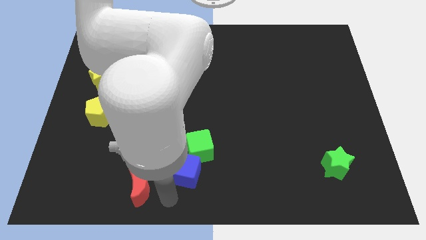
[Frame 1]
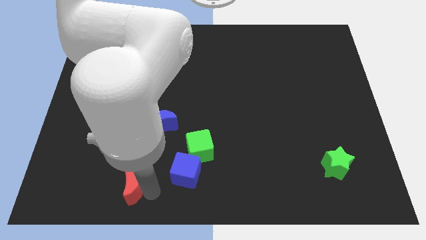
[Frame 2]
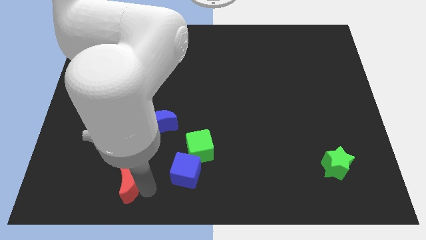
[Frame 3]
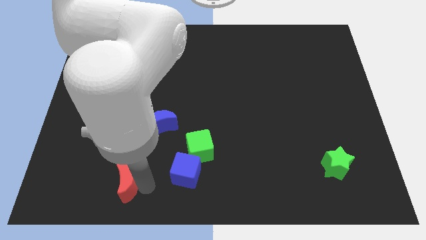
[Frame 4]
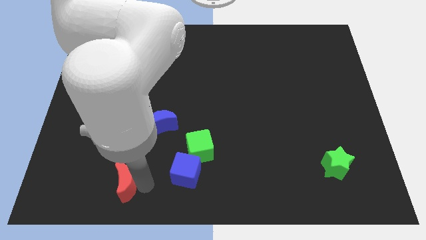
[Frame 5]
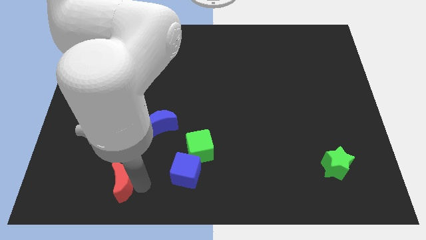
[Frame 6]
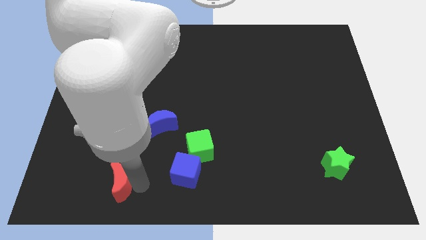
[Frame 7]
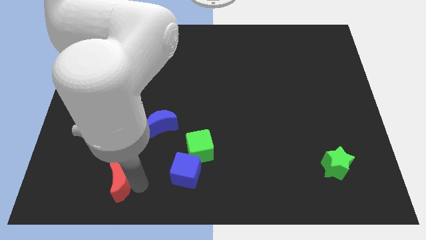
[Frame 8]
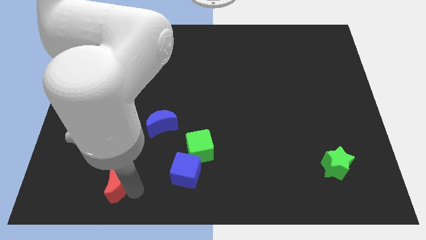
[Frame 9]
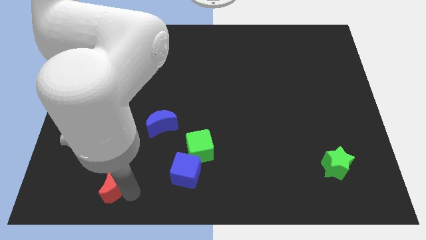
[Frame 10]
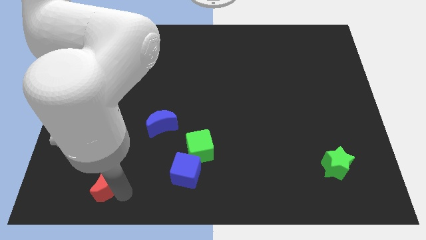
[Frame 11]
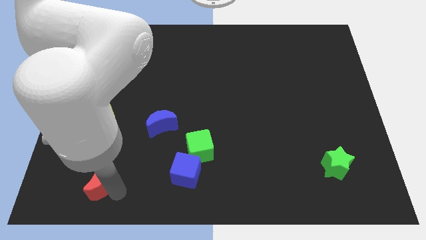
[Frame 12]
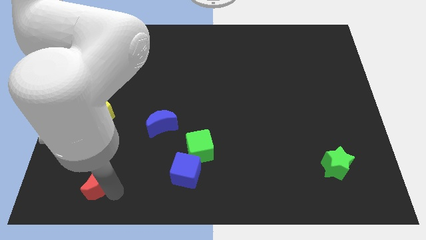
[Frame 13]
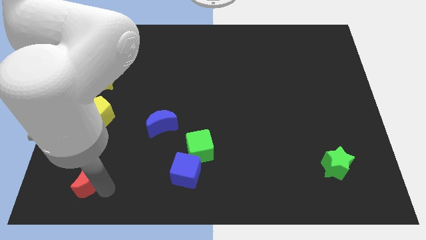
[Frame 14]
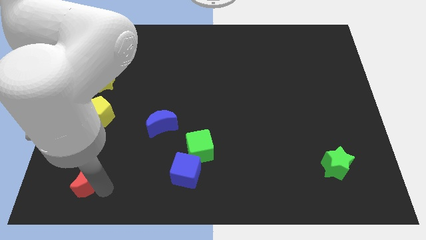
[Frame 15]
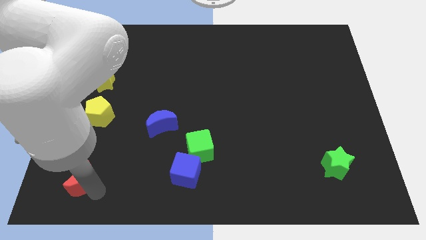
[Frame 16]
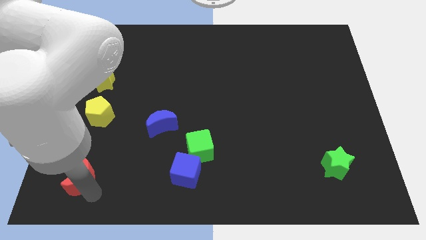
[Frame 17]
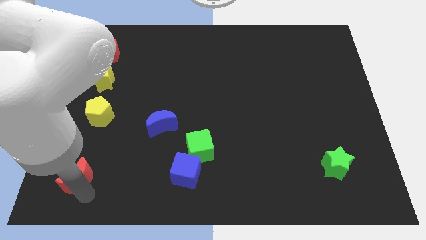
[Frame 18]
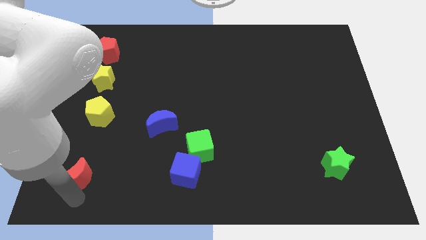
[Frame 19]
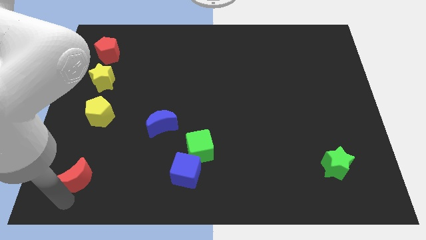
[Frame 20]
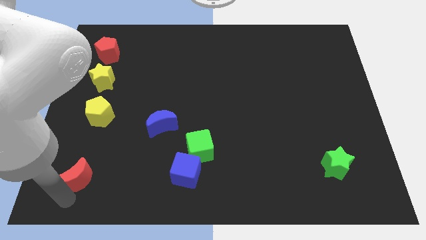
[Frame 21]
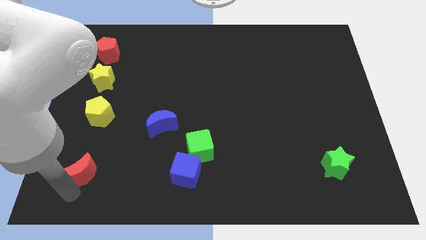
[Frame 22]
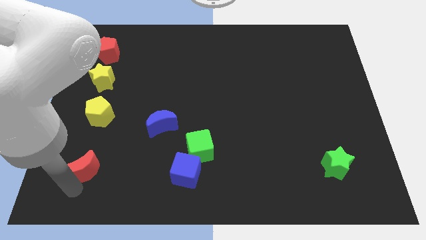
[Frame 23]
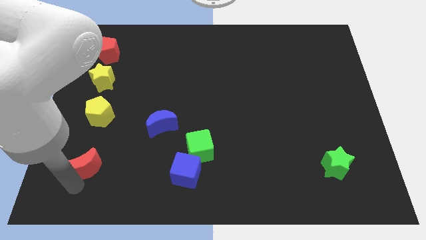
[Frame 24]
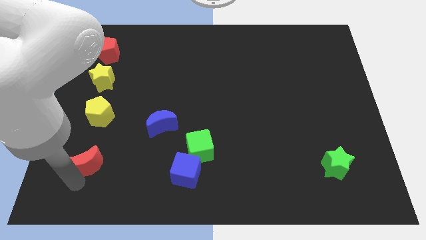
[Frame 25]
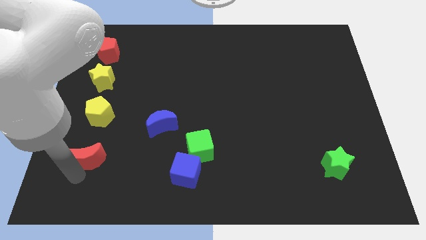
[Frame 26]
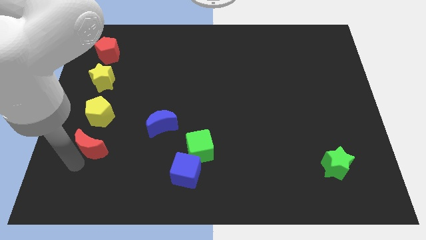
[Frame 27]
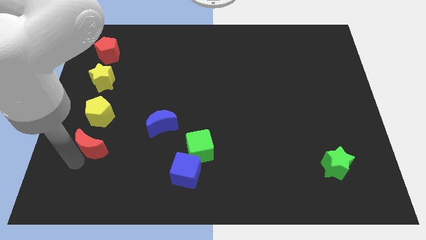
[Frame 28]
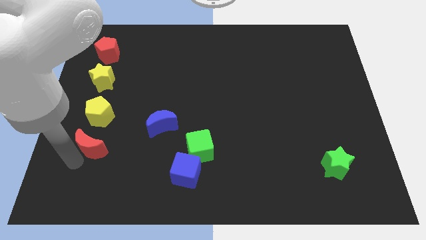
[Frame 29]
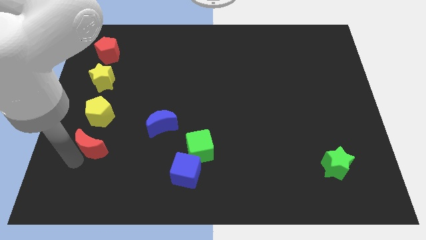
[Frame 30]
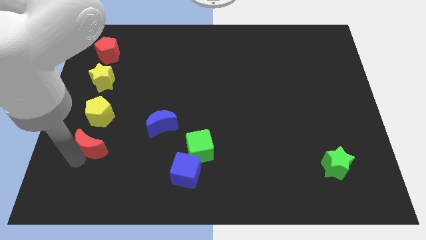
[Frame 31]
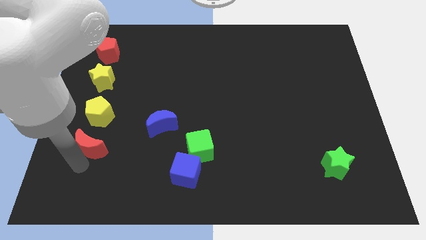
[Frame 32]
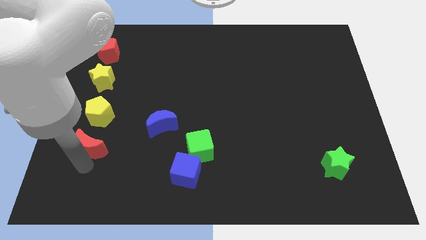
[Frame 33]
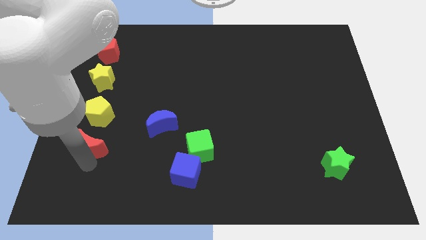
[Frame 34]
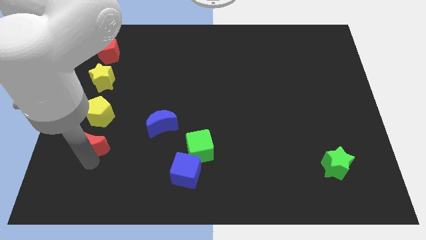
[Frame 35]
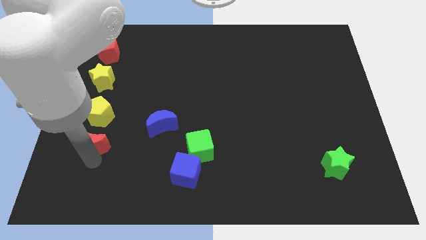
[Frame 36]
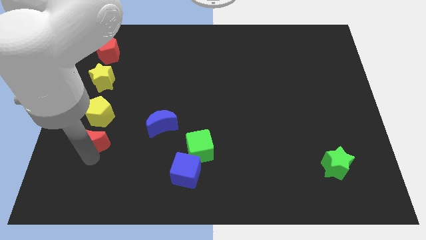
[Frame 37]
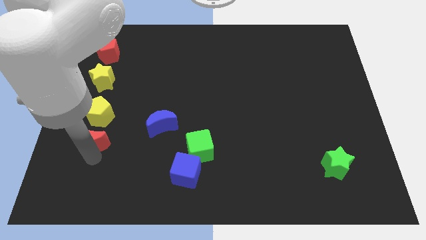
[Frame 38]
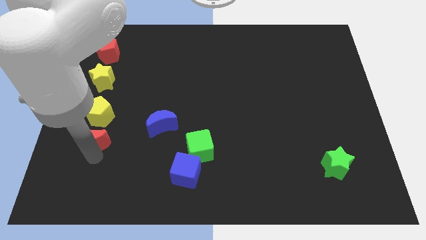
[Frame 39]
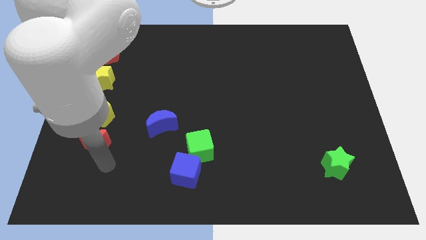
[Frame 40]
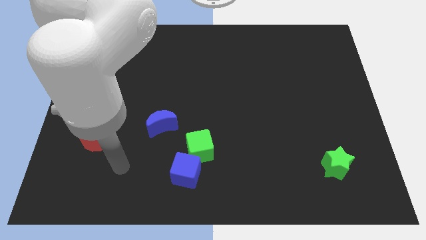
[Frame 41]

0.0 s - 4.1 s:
place red crescent below the yellow pentagon

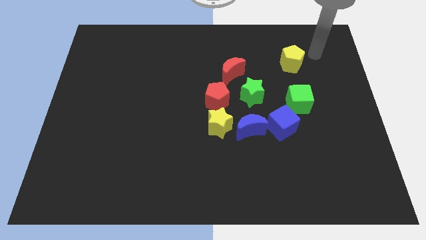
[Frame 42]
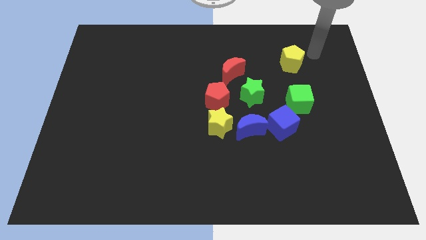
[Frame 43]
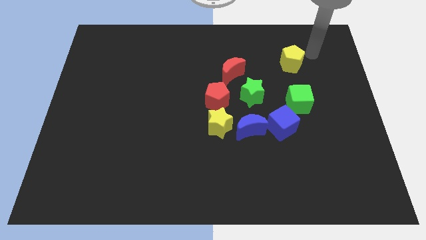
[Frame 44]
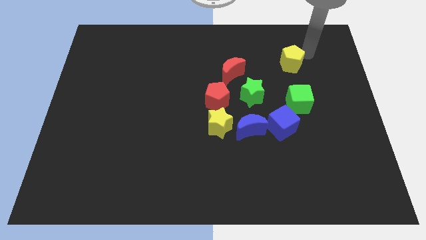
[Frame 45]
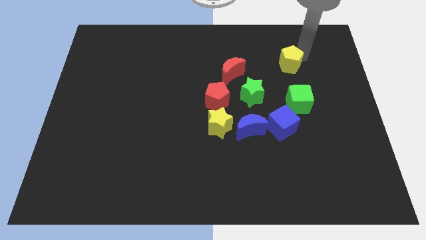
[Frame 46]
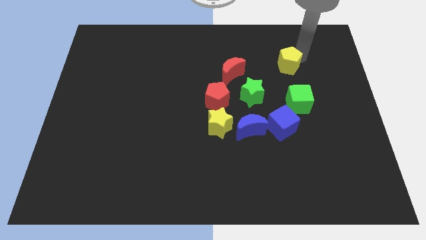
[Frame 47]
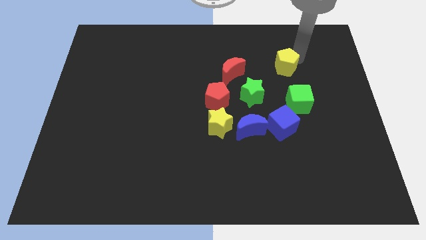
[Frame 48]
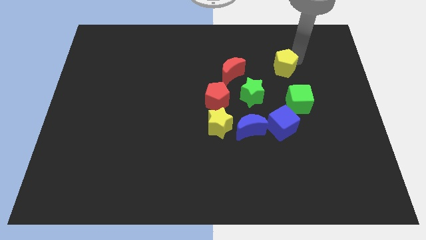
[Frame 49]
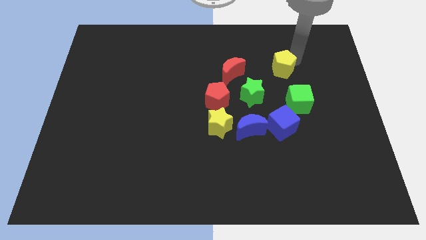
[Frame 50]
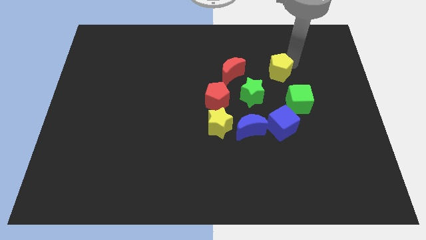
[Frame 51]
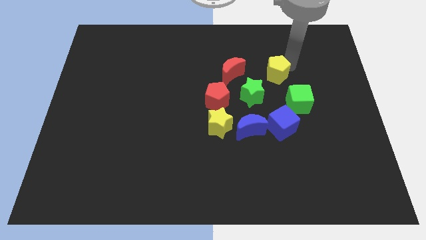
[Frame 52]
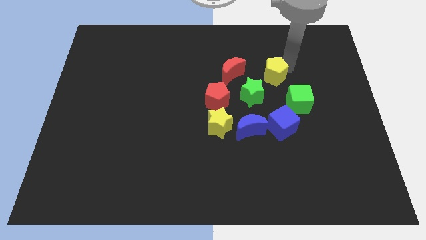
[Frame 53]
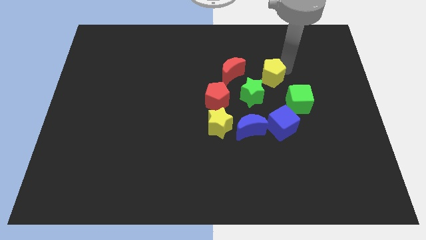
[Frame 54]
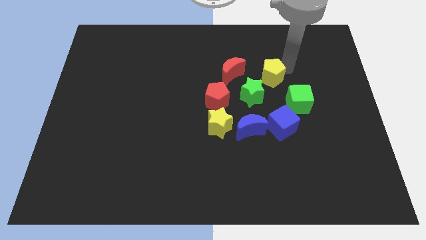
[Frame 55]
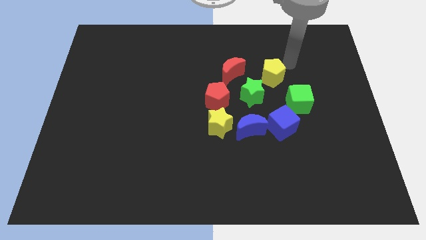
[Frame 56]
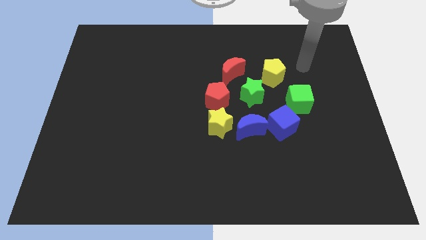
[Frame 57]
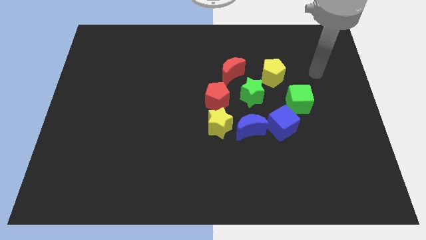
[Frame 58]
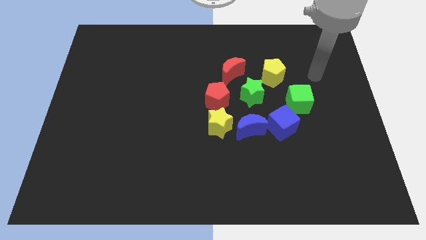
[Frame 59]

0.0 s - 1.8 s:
put the yellow pentagon diagonally on the top right side of the green star

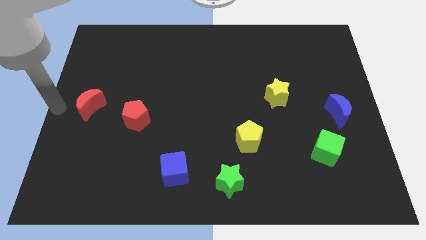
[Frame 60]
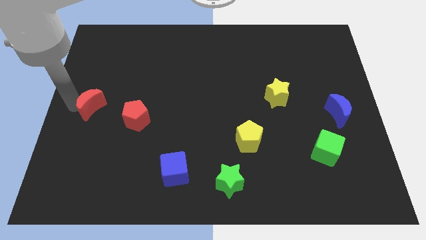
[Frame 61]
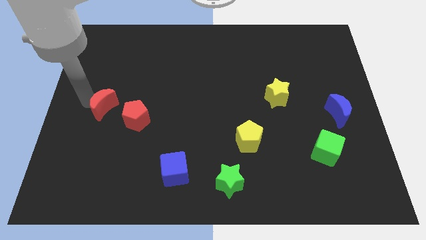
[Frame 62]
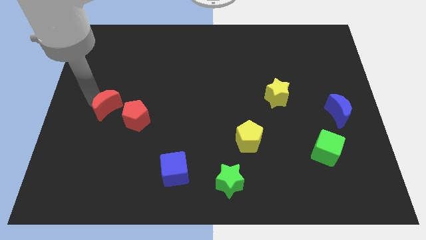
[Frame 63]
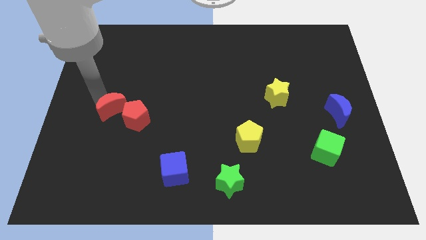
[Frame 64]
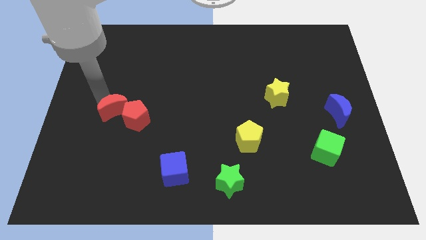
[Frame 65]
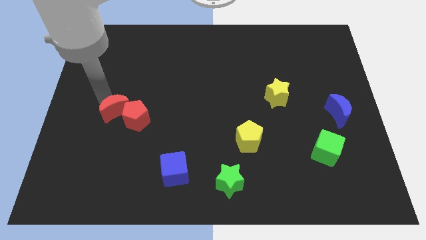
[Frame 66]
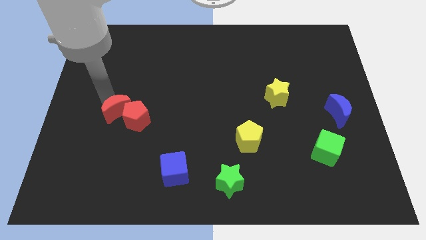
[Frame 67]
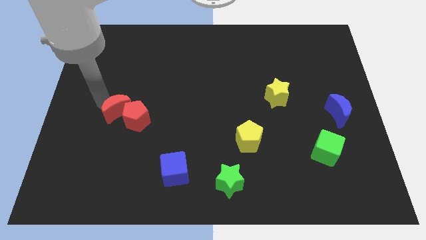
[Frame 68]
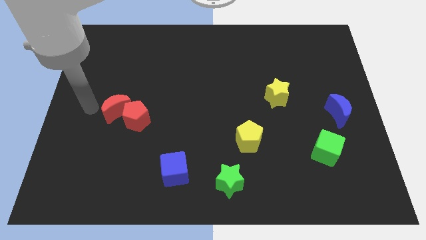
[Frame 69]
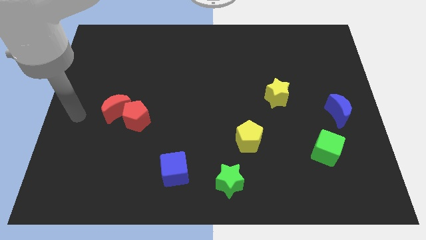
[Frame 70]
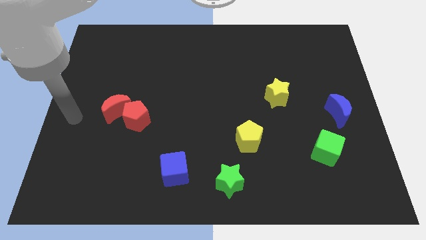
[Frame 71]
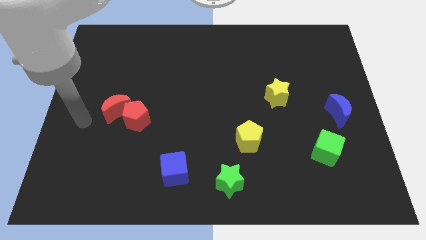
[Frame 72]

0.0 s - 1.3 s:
push red crescent into red pentagon

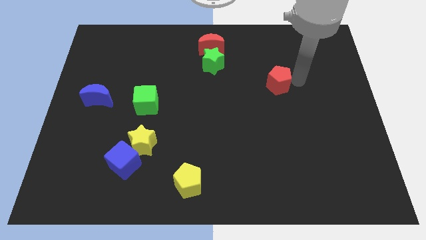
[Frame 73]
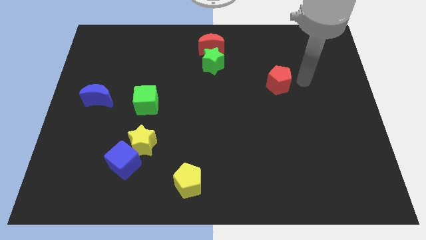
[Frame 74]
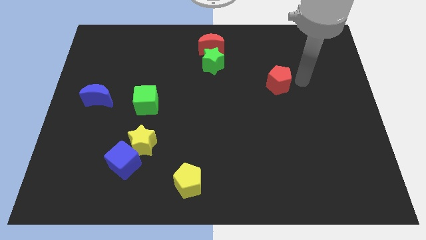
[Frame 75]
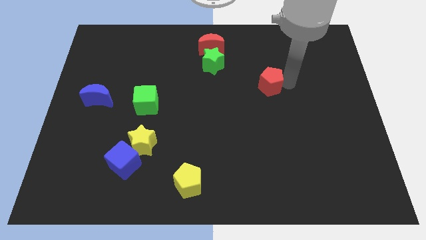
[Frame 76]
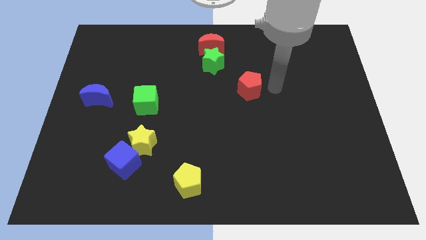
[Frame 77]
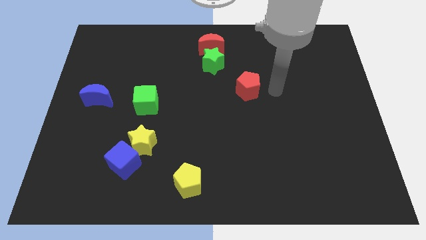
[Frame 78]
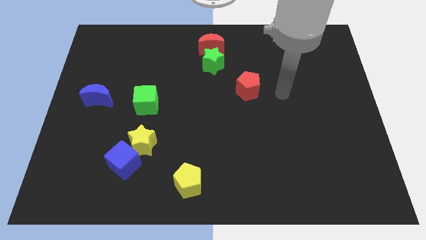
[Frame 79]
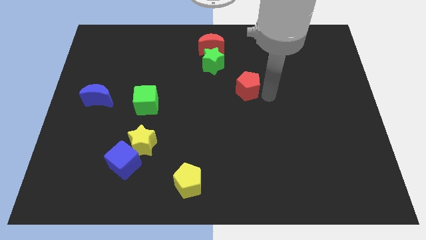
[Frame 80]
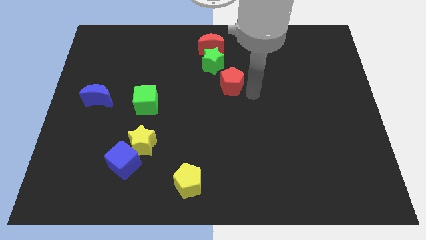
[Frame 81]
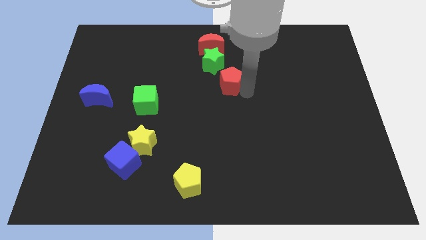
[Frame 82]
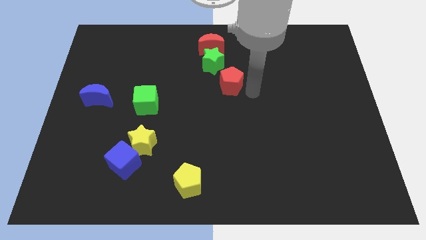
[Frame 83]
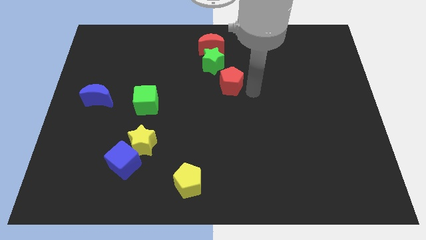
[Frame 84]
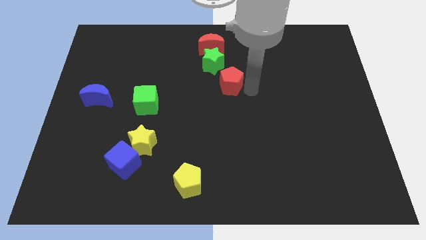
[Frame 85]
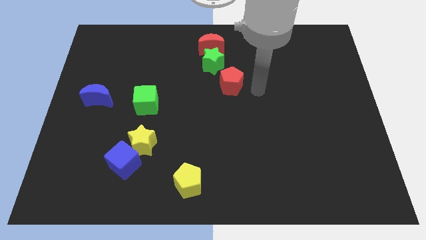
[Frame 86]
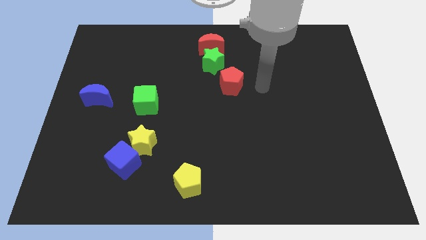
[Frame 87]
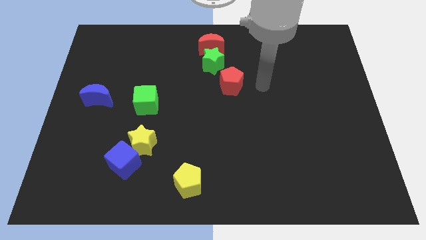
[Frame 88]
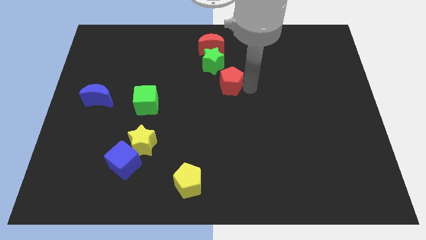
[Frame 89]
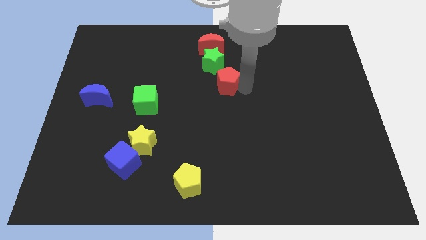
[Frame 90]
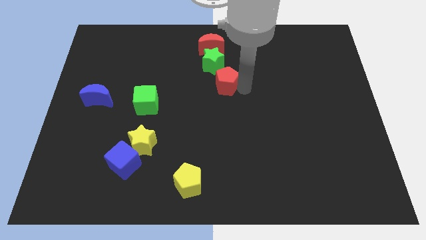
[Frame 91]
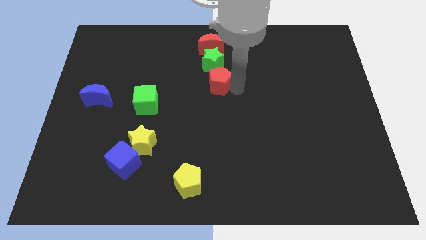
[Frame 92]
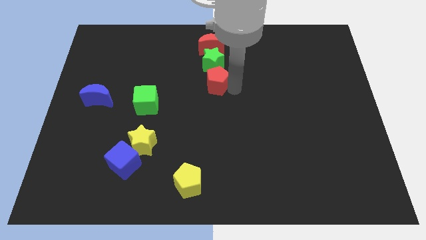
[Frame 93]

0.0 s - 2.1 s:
push the red pentagon to the bottom of the green star
